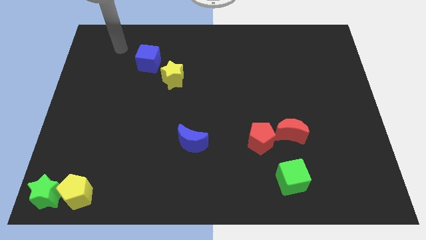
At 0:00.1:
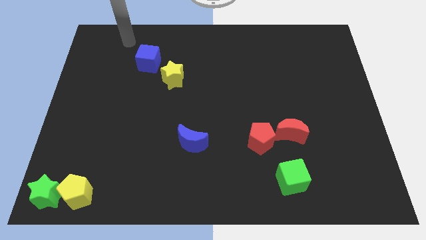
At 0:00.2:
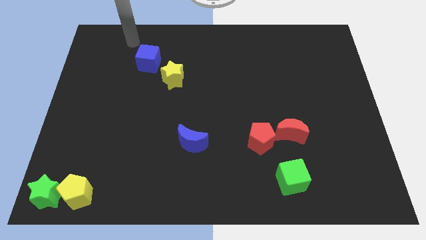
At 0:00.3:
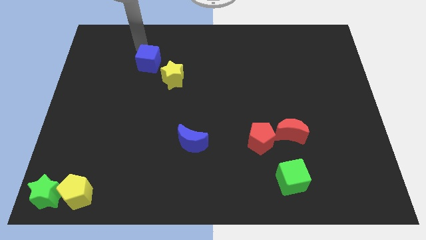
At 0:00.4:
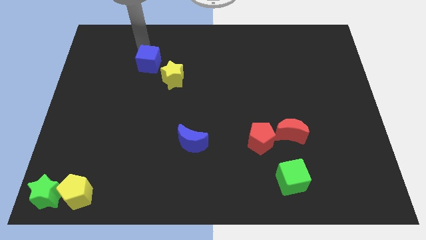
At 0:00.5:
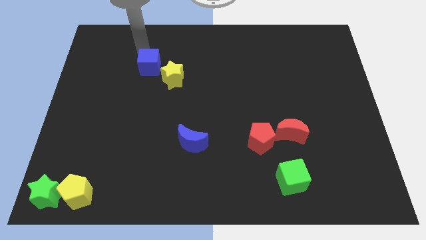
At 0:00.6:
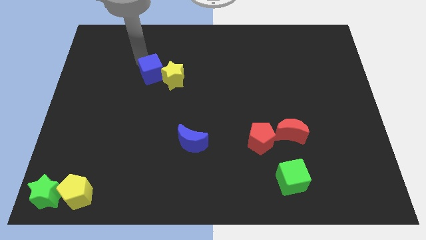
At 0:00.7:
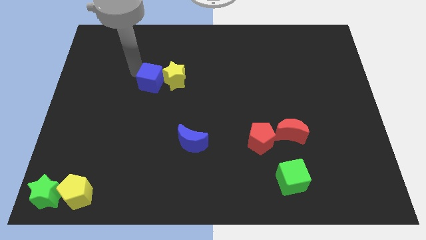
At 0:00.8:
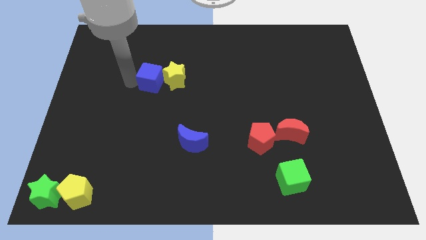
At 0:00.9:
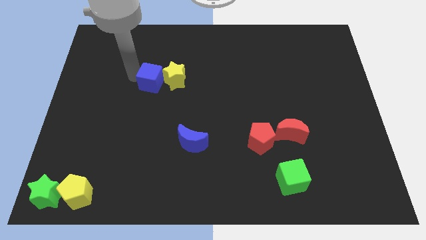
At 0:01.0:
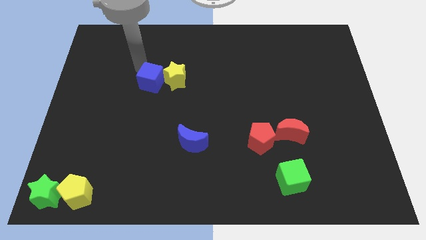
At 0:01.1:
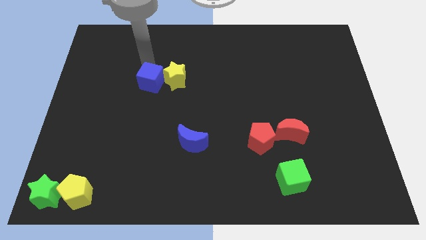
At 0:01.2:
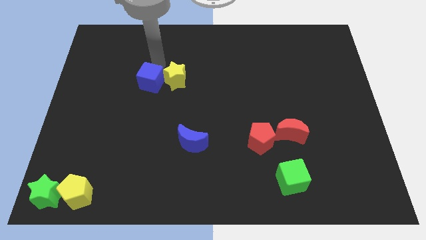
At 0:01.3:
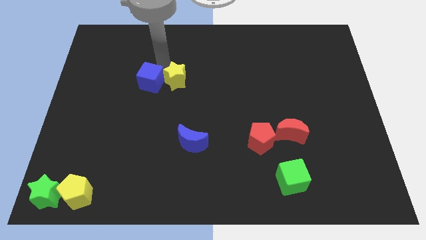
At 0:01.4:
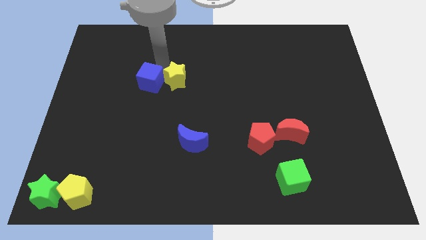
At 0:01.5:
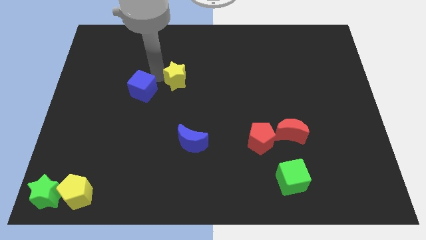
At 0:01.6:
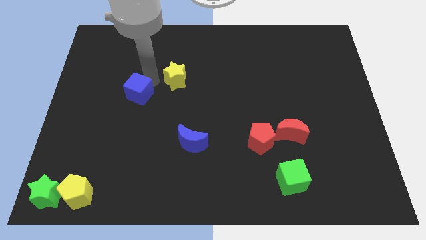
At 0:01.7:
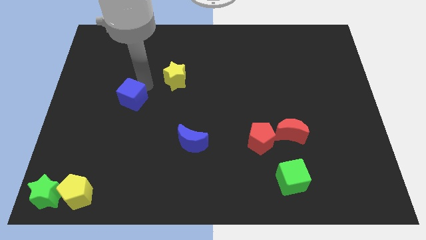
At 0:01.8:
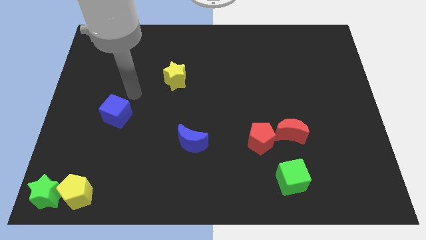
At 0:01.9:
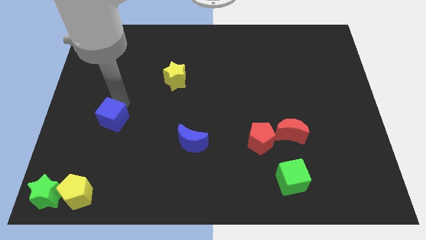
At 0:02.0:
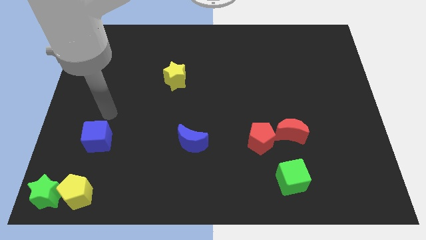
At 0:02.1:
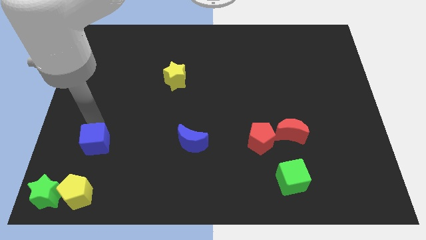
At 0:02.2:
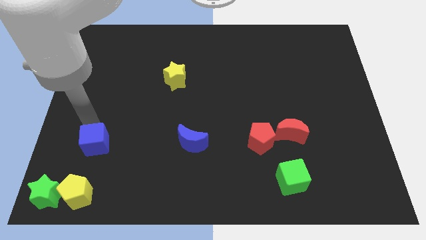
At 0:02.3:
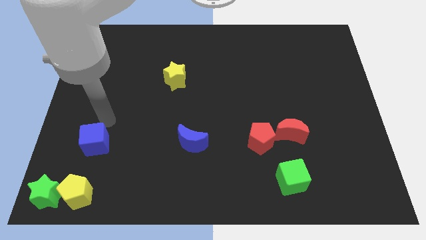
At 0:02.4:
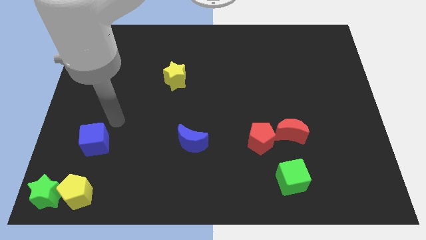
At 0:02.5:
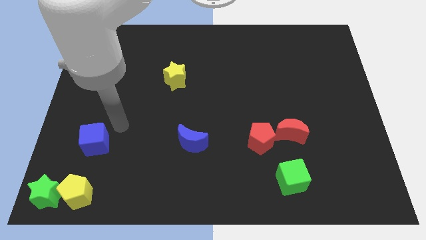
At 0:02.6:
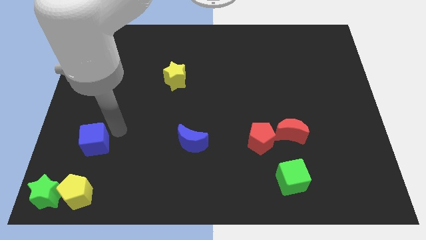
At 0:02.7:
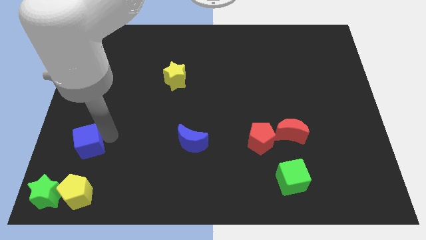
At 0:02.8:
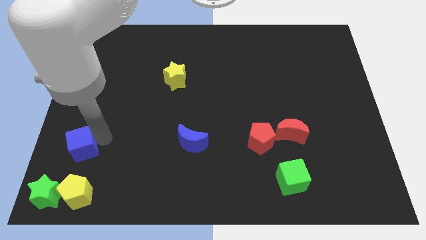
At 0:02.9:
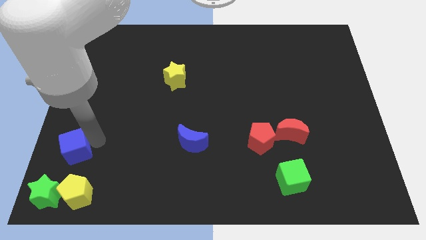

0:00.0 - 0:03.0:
push blue cube above yellow pentagon

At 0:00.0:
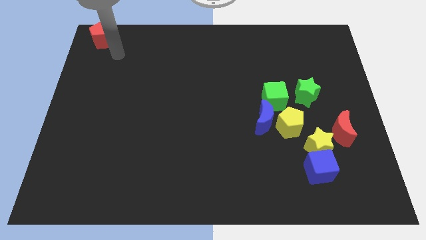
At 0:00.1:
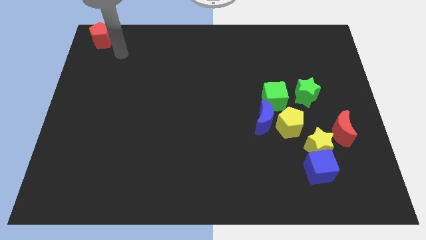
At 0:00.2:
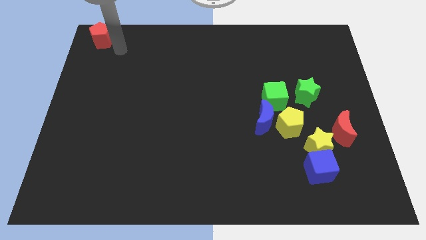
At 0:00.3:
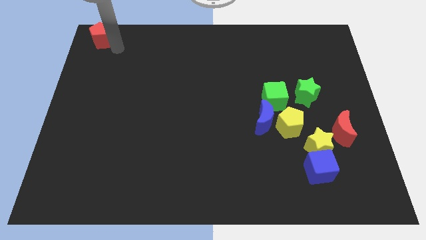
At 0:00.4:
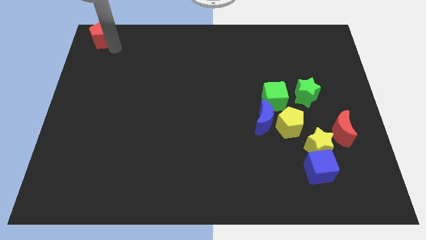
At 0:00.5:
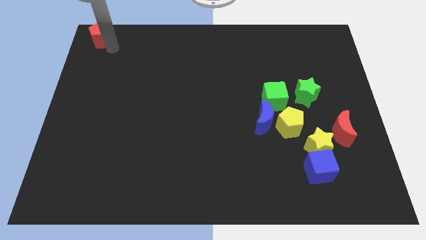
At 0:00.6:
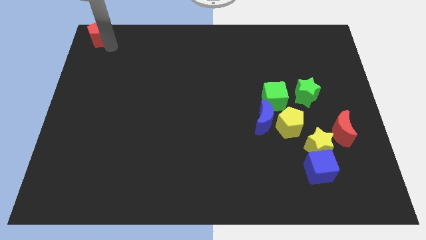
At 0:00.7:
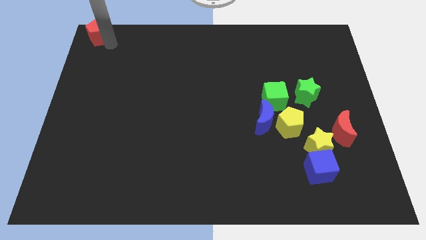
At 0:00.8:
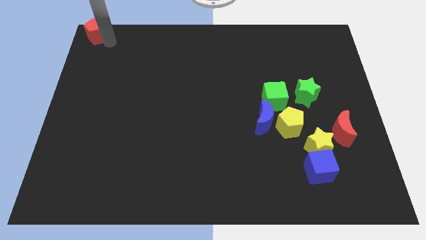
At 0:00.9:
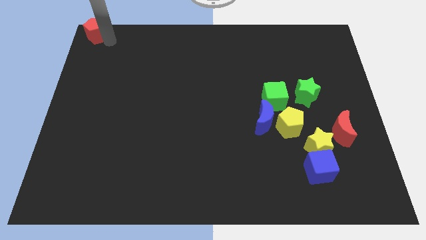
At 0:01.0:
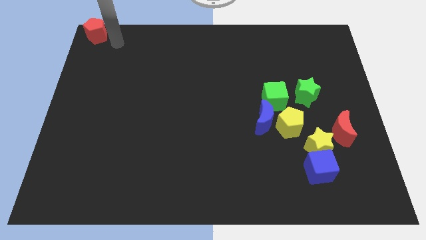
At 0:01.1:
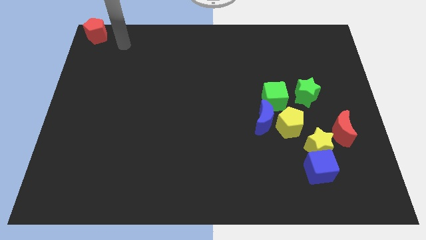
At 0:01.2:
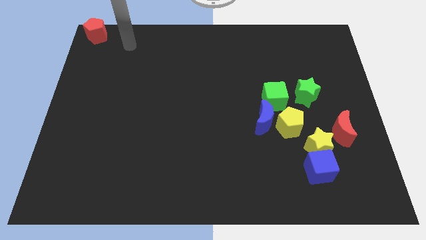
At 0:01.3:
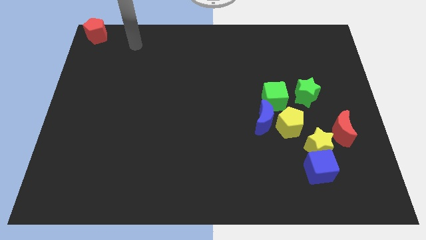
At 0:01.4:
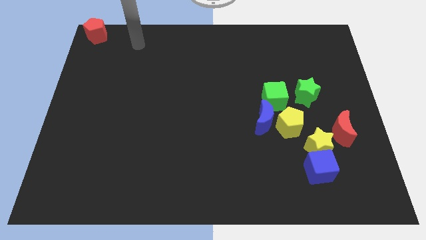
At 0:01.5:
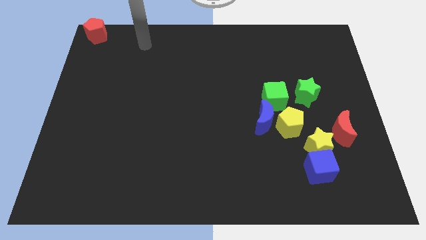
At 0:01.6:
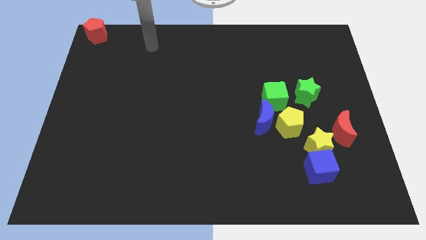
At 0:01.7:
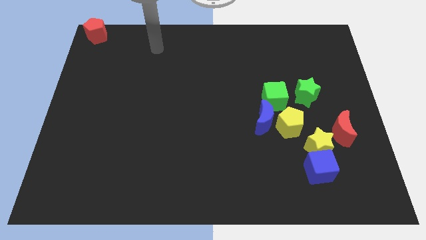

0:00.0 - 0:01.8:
place the red pentagon to the top left corner

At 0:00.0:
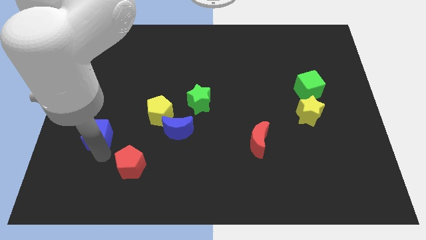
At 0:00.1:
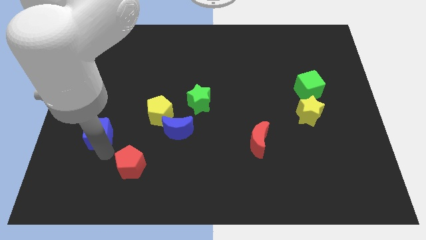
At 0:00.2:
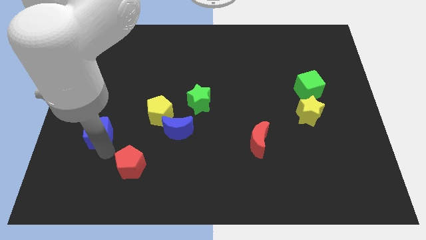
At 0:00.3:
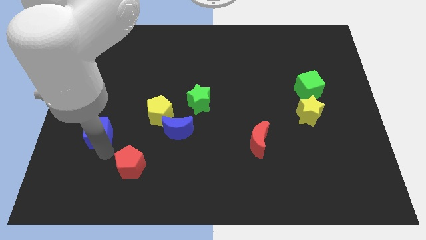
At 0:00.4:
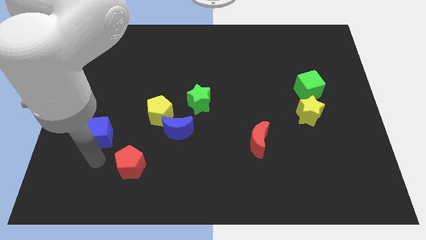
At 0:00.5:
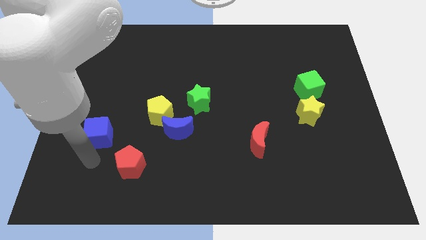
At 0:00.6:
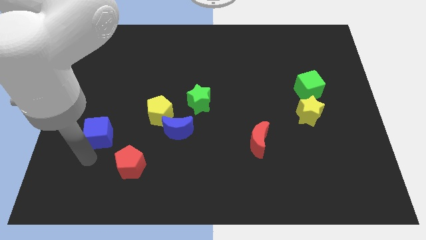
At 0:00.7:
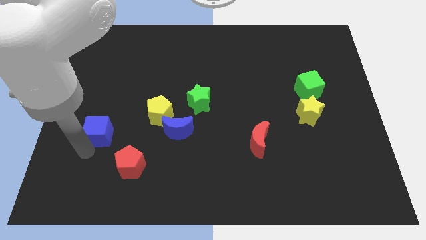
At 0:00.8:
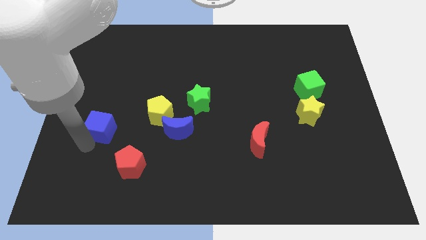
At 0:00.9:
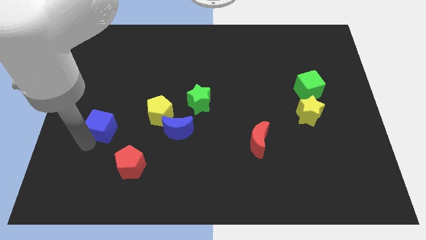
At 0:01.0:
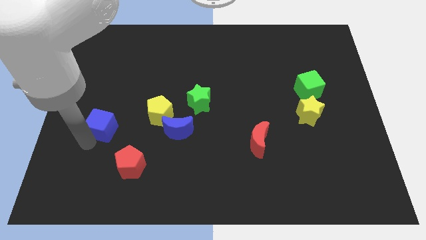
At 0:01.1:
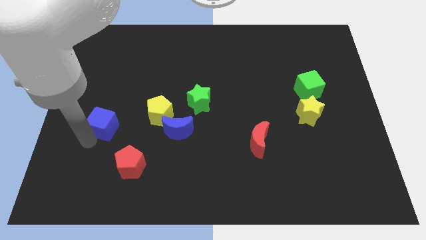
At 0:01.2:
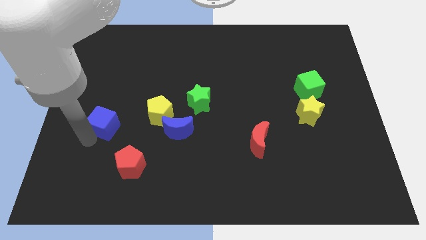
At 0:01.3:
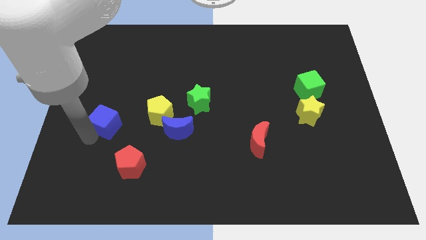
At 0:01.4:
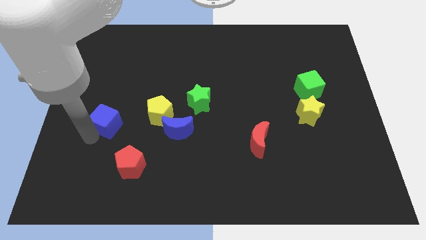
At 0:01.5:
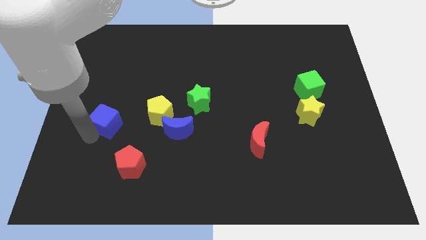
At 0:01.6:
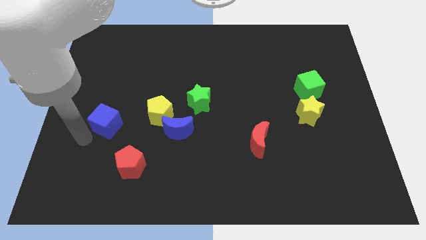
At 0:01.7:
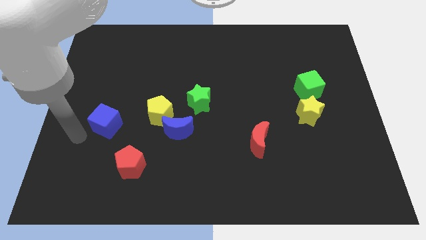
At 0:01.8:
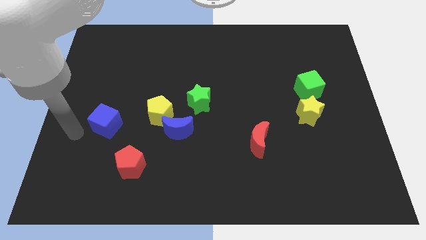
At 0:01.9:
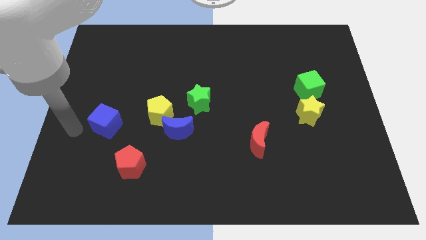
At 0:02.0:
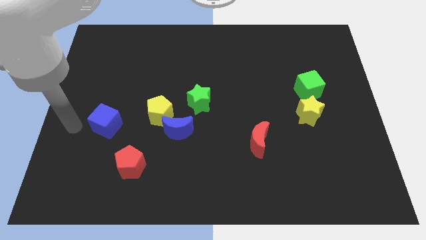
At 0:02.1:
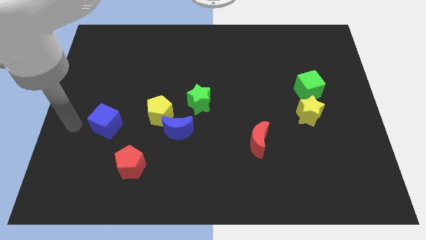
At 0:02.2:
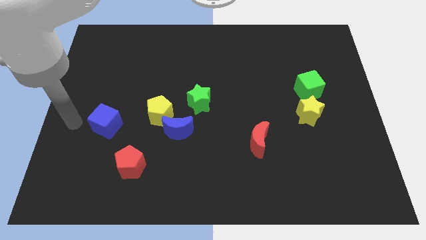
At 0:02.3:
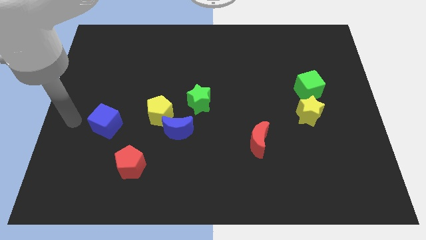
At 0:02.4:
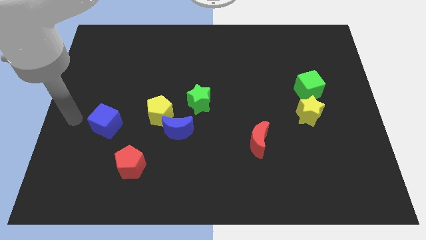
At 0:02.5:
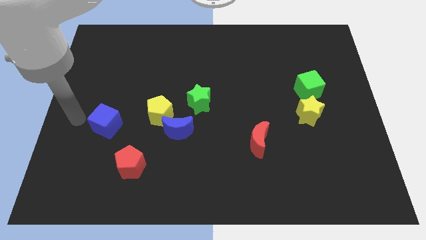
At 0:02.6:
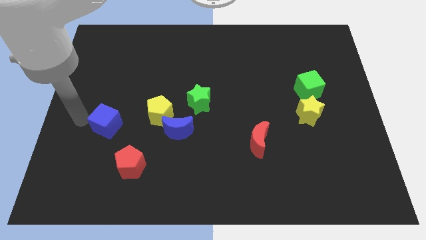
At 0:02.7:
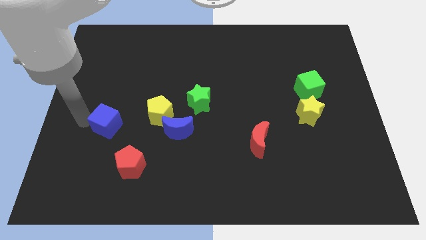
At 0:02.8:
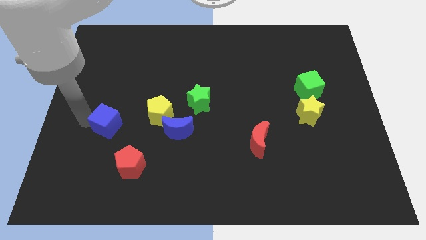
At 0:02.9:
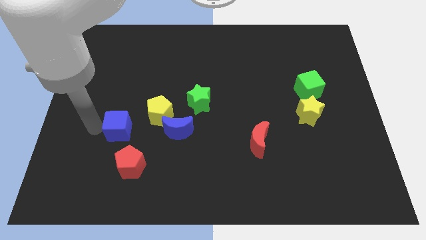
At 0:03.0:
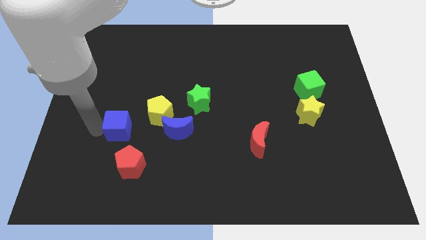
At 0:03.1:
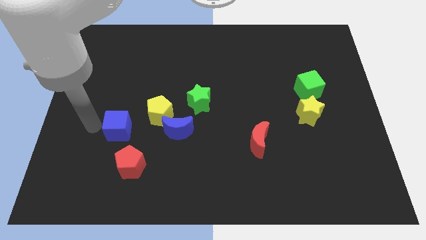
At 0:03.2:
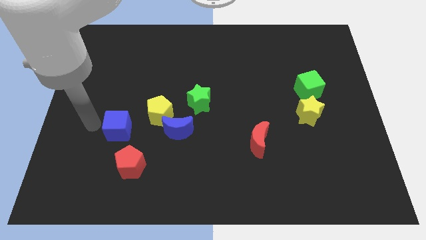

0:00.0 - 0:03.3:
slide the blue cube to the top left side of the red pentagon

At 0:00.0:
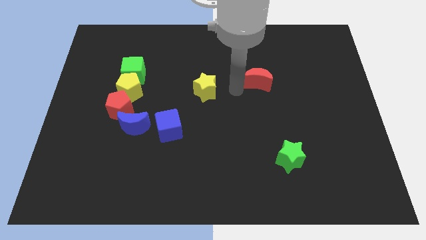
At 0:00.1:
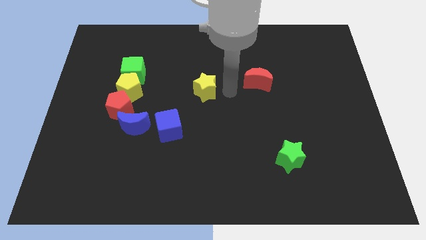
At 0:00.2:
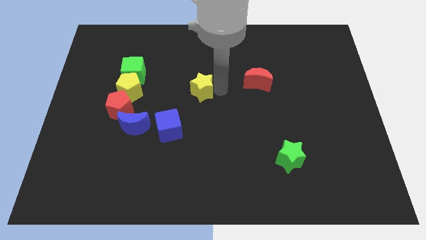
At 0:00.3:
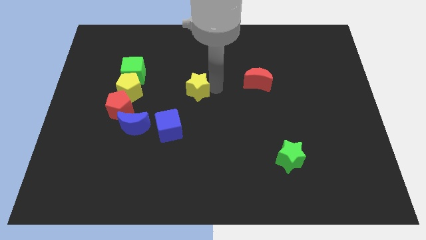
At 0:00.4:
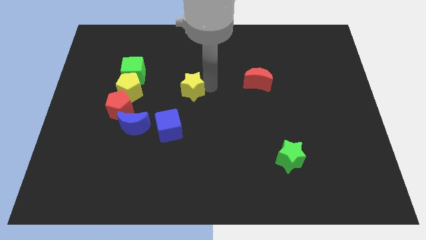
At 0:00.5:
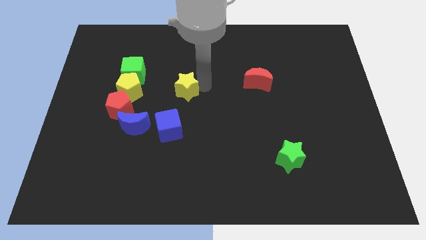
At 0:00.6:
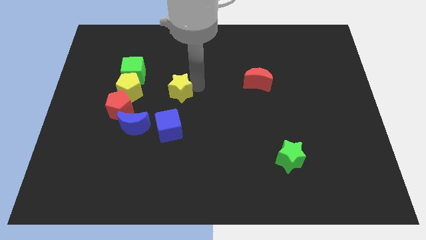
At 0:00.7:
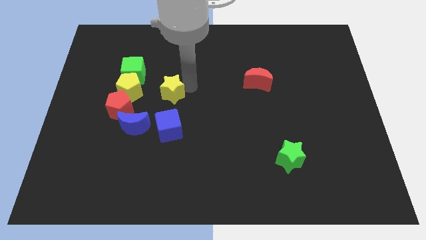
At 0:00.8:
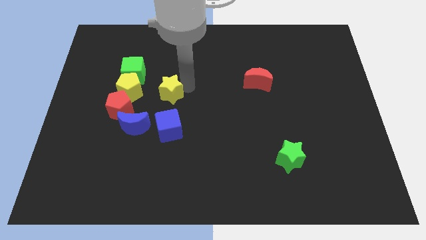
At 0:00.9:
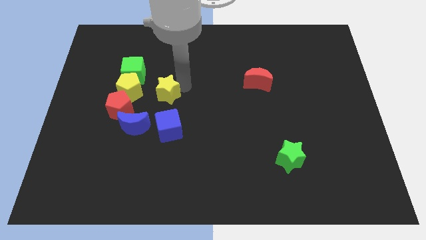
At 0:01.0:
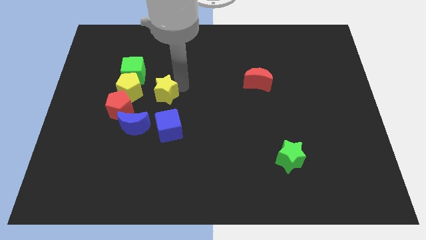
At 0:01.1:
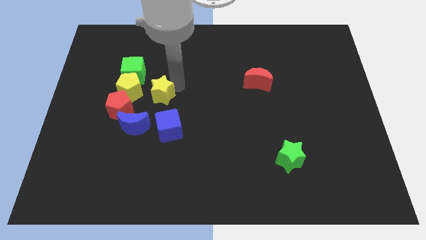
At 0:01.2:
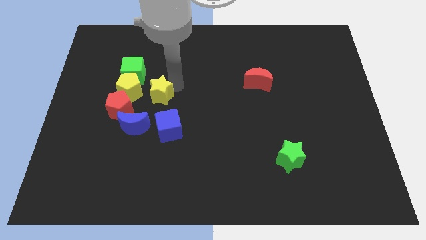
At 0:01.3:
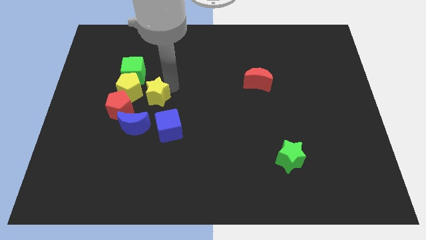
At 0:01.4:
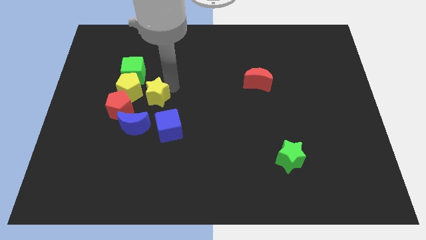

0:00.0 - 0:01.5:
push the yellow star to the right of the yellow pentagon
